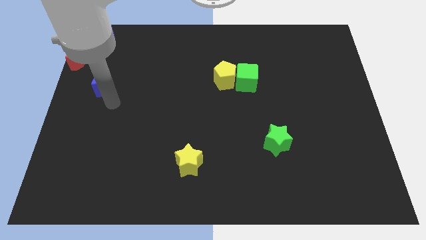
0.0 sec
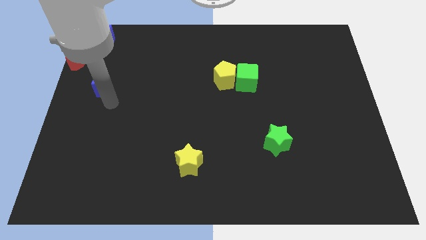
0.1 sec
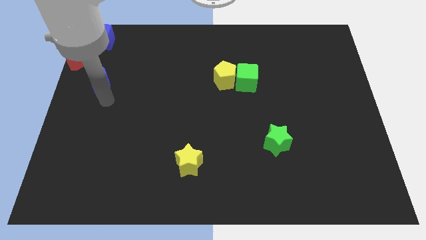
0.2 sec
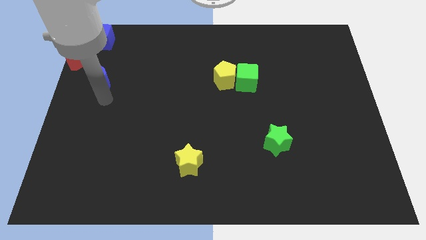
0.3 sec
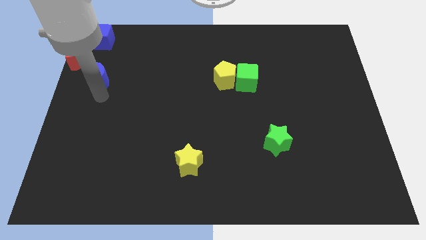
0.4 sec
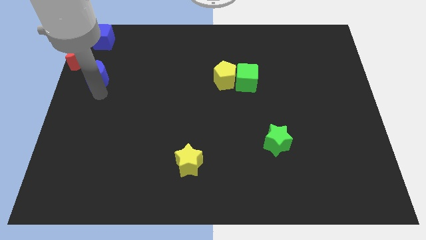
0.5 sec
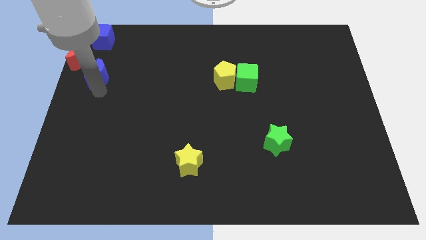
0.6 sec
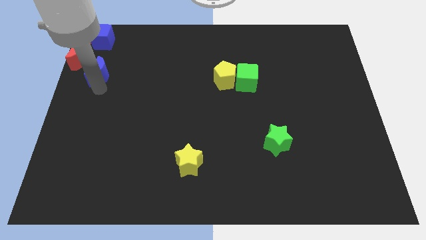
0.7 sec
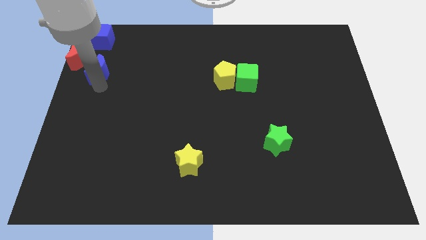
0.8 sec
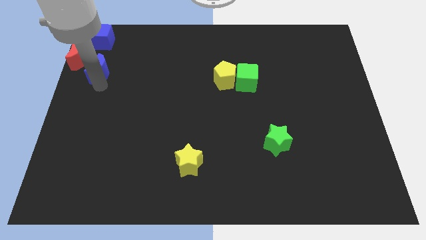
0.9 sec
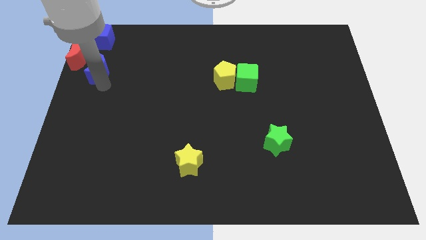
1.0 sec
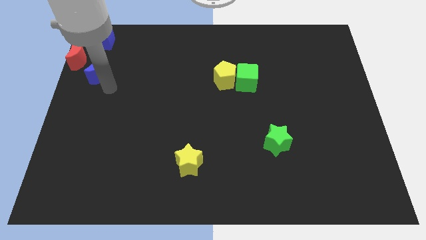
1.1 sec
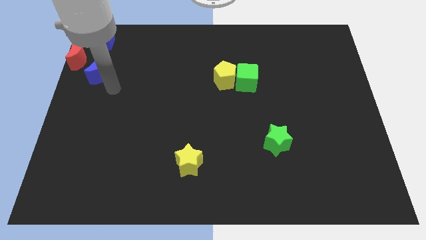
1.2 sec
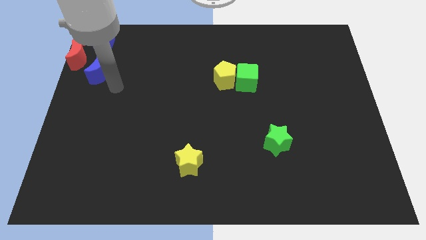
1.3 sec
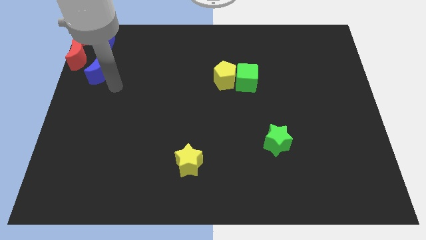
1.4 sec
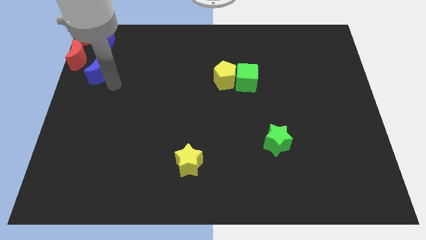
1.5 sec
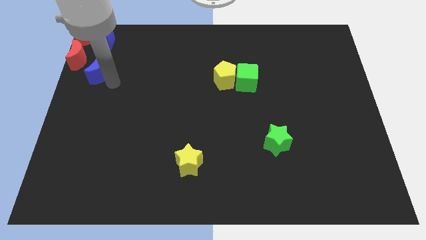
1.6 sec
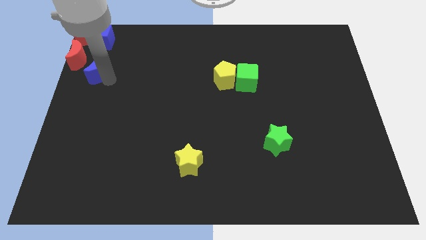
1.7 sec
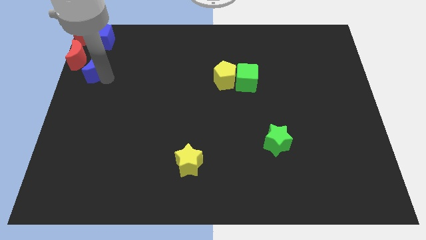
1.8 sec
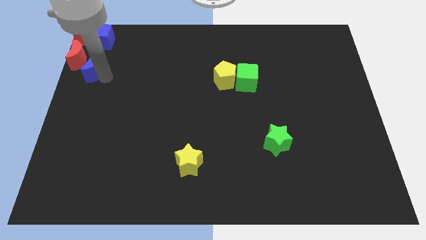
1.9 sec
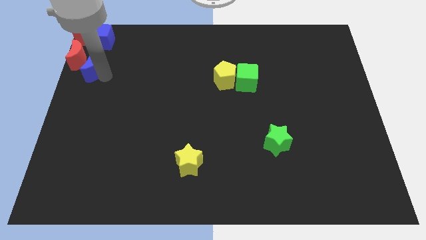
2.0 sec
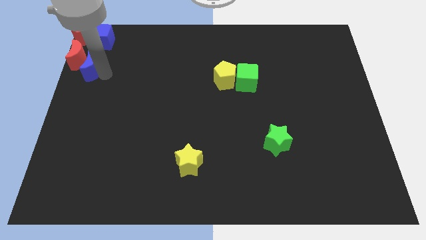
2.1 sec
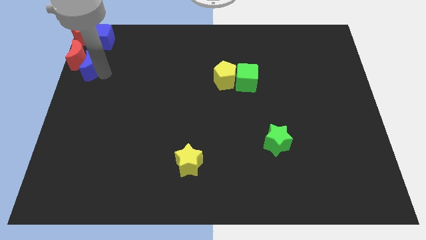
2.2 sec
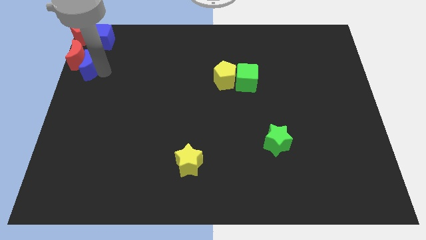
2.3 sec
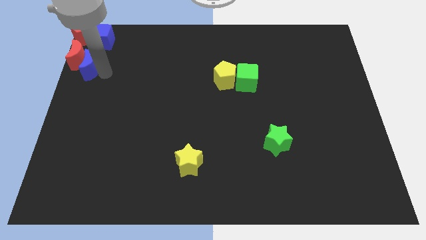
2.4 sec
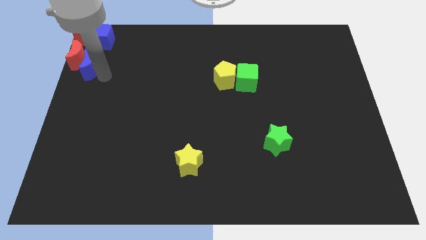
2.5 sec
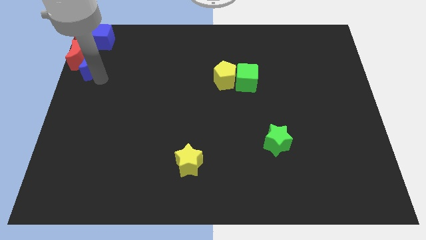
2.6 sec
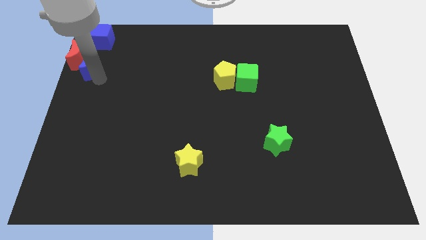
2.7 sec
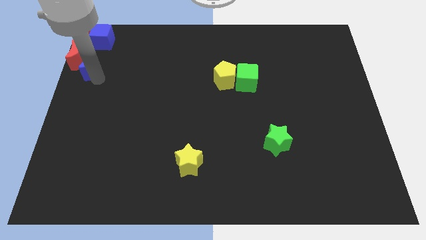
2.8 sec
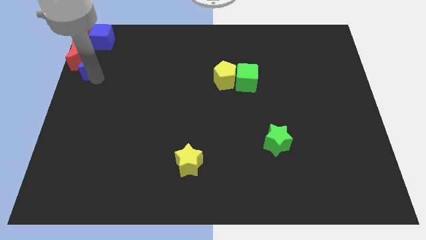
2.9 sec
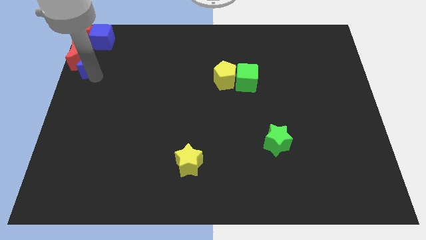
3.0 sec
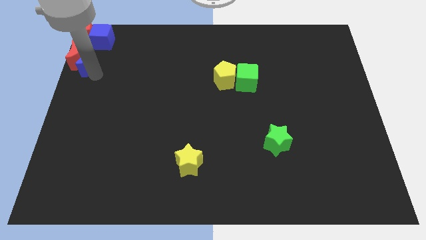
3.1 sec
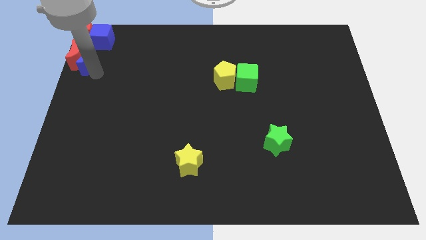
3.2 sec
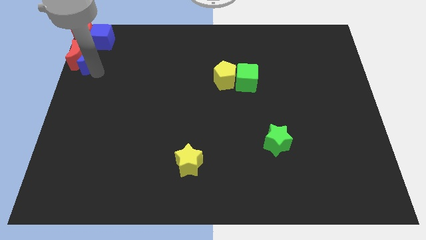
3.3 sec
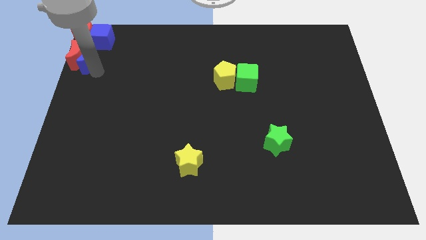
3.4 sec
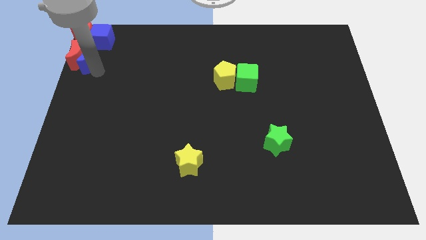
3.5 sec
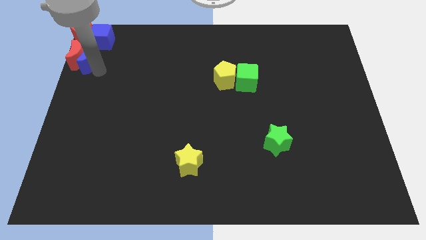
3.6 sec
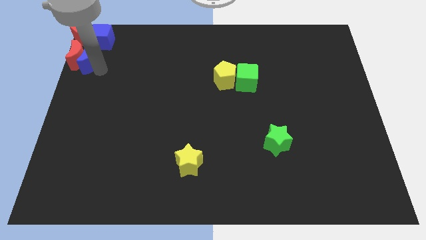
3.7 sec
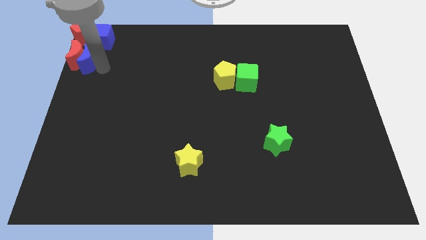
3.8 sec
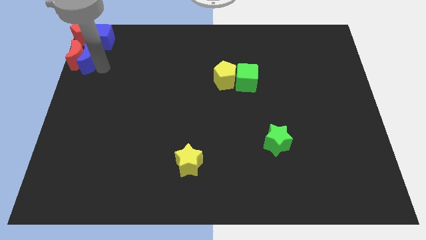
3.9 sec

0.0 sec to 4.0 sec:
move the blue moon close to the right side of the red moon

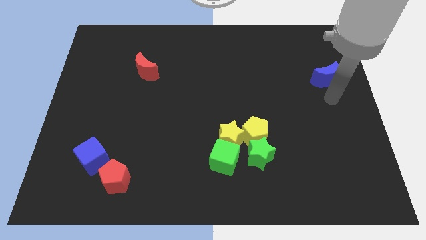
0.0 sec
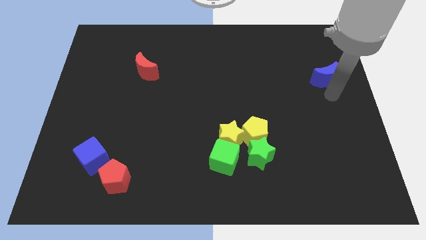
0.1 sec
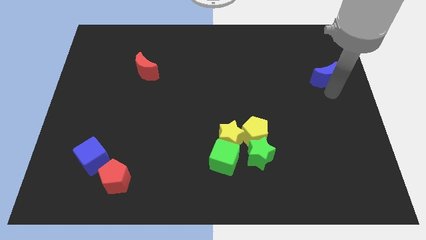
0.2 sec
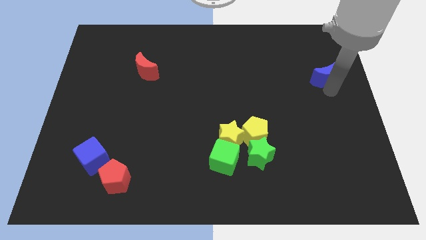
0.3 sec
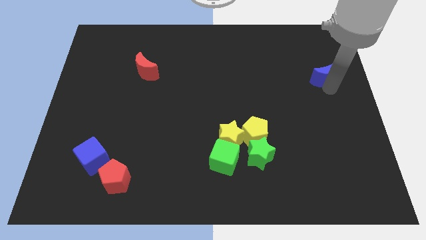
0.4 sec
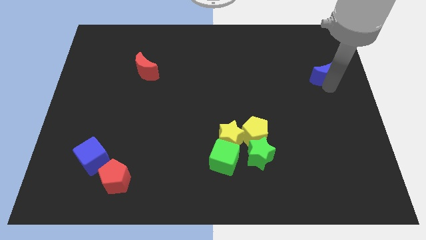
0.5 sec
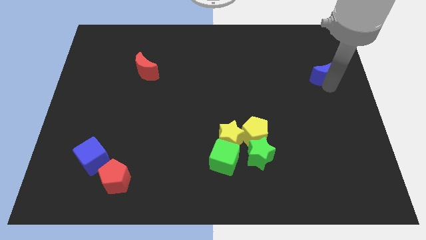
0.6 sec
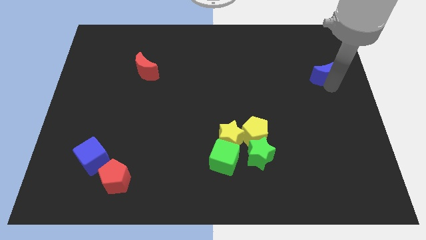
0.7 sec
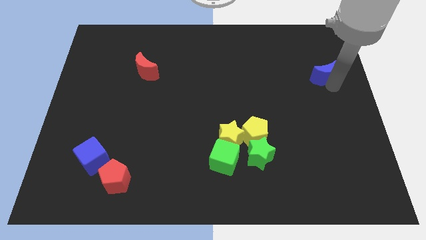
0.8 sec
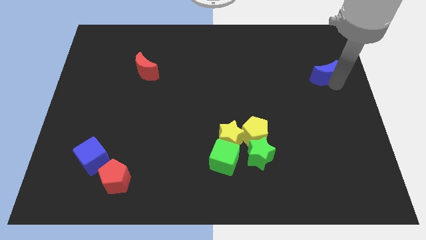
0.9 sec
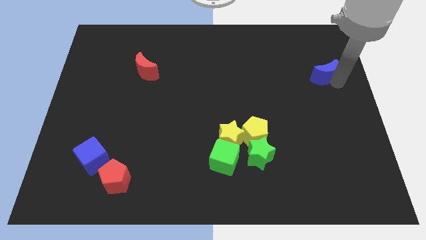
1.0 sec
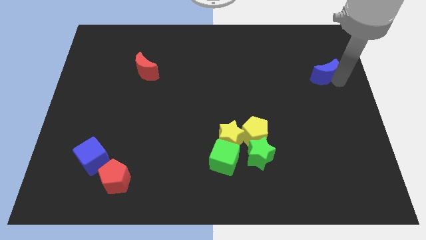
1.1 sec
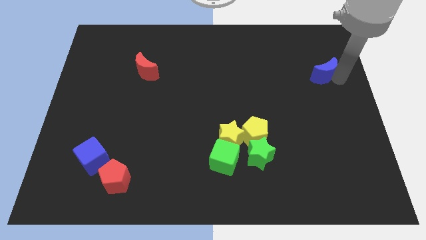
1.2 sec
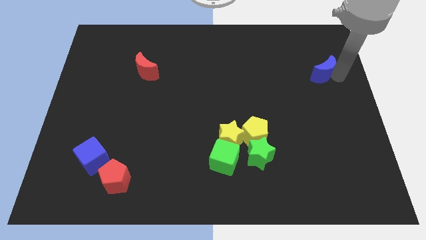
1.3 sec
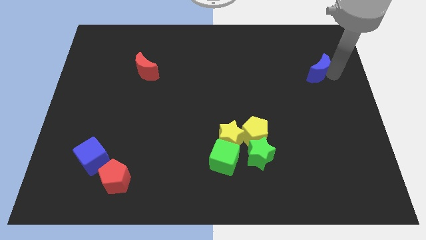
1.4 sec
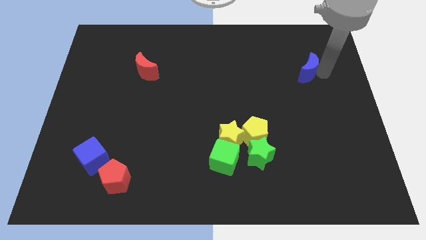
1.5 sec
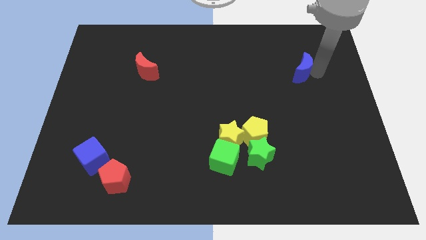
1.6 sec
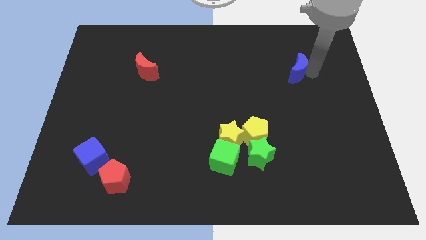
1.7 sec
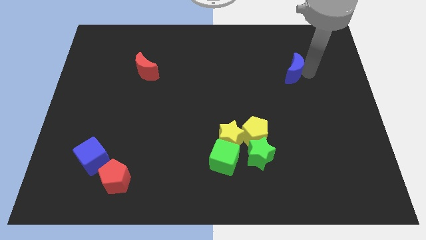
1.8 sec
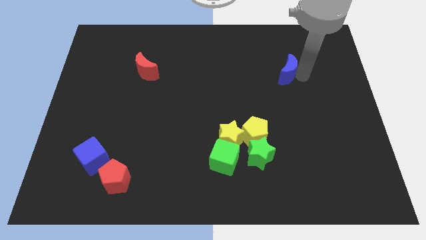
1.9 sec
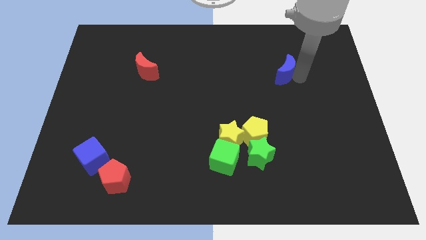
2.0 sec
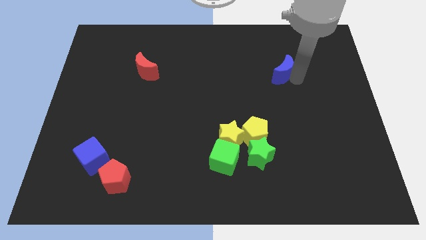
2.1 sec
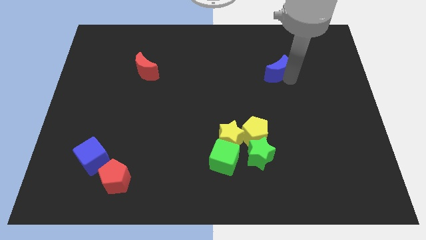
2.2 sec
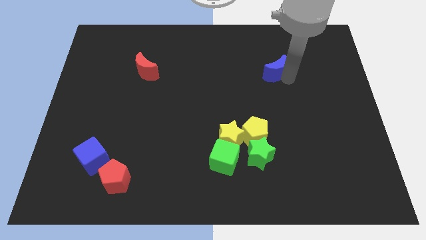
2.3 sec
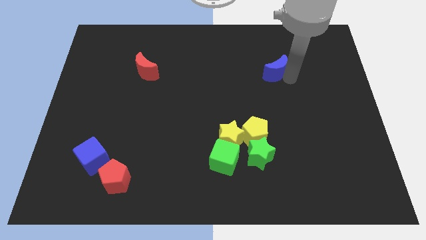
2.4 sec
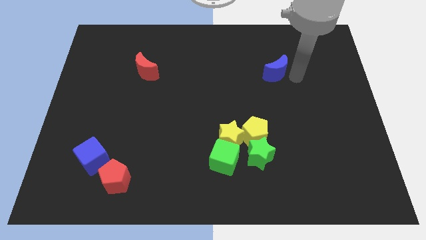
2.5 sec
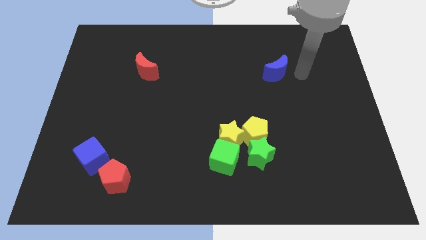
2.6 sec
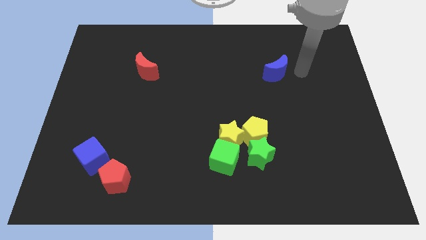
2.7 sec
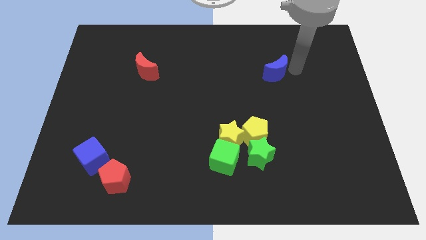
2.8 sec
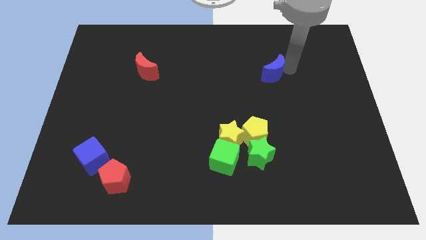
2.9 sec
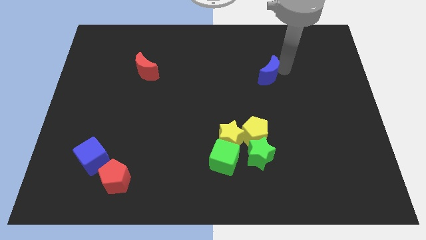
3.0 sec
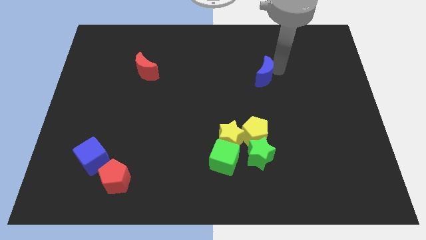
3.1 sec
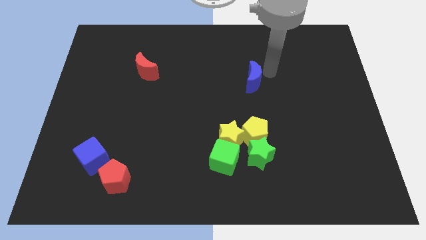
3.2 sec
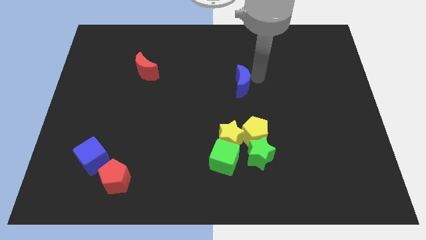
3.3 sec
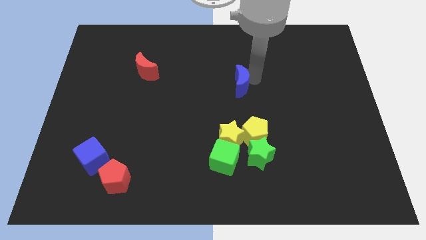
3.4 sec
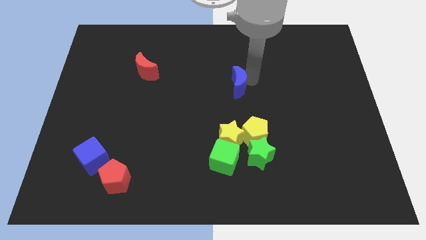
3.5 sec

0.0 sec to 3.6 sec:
move the blue crescent above the group of blocks

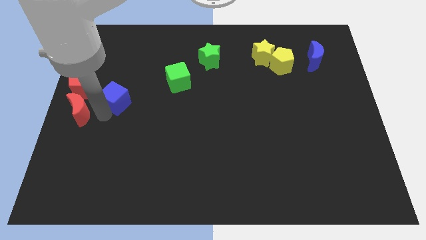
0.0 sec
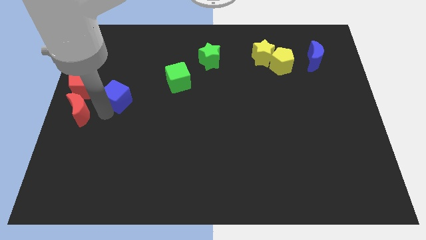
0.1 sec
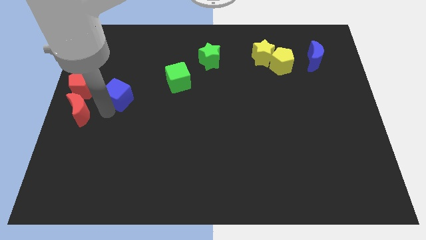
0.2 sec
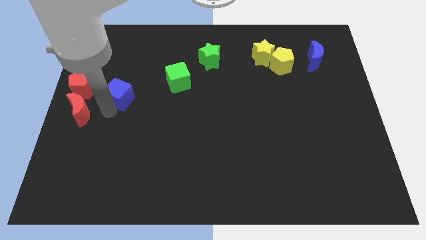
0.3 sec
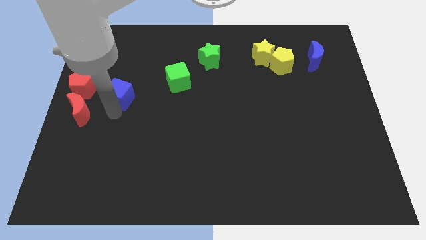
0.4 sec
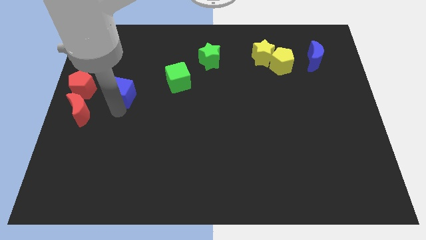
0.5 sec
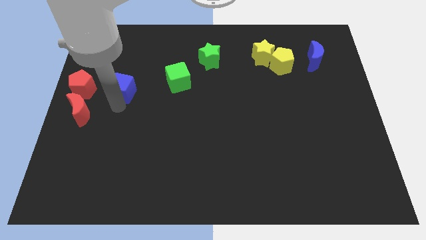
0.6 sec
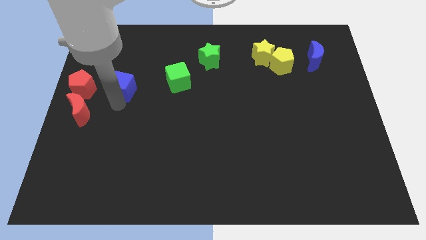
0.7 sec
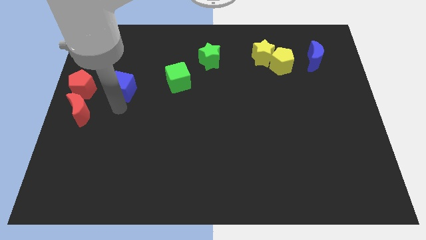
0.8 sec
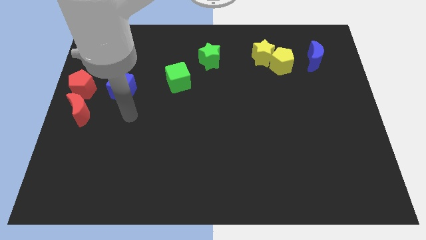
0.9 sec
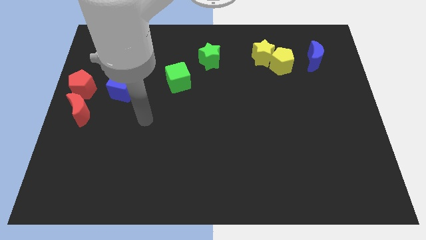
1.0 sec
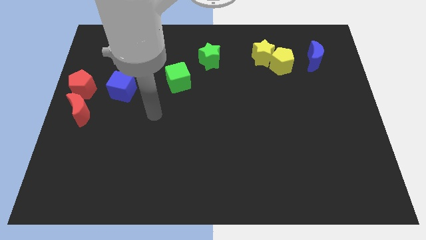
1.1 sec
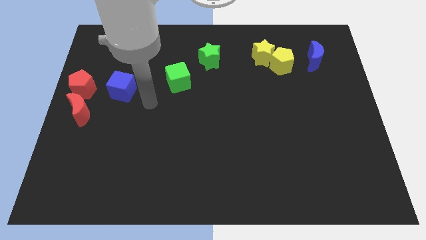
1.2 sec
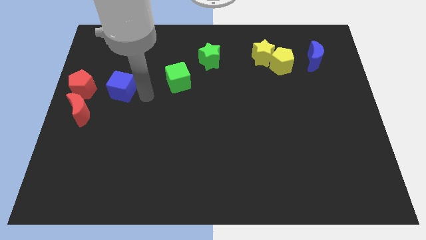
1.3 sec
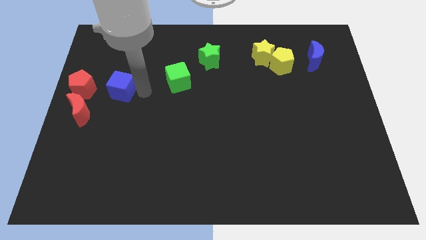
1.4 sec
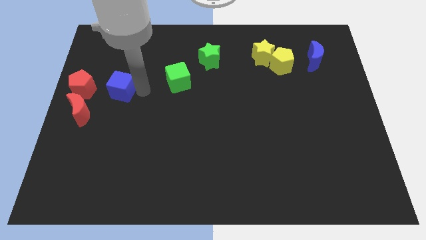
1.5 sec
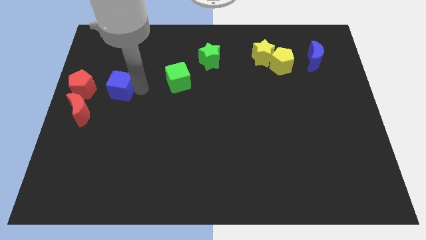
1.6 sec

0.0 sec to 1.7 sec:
push blue cube left to the red pentagon
